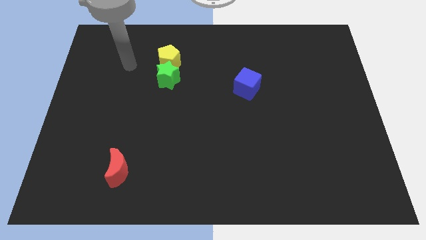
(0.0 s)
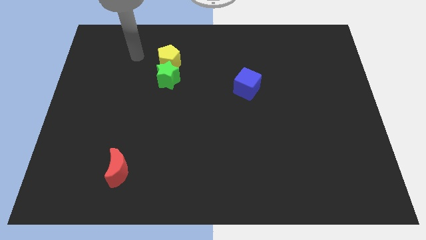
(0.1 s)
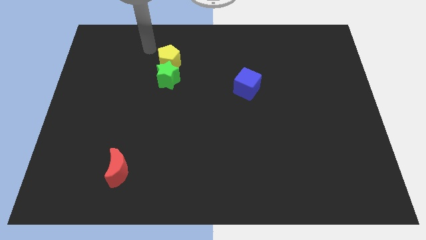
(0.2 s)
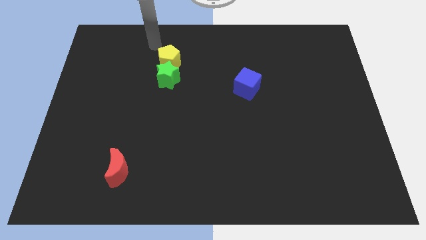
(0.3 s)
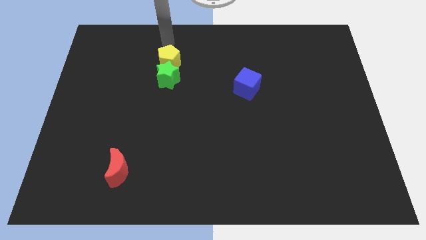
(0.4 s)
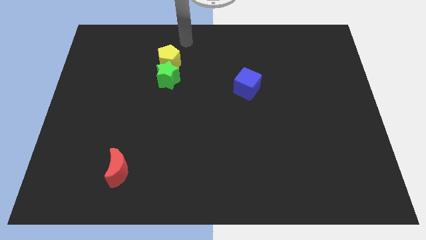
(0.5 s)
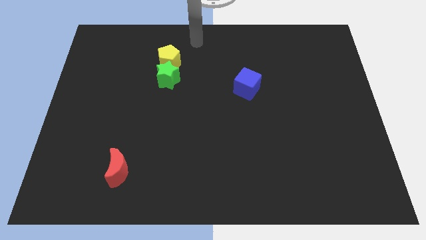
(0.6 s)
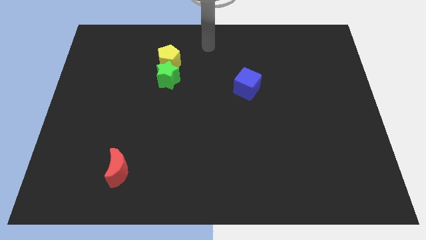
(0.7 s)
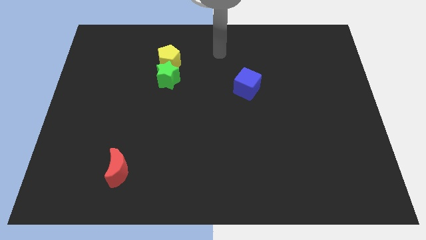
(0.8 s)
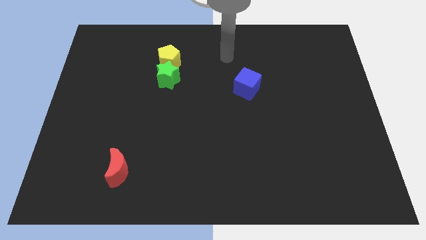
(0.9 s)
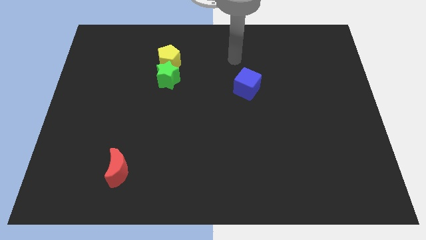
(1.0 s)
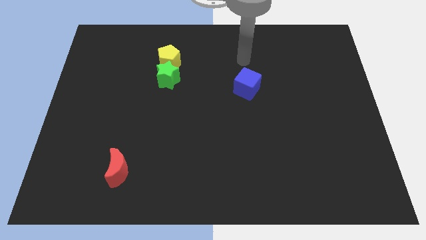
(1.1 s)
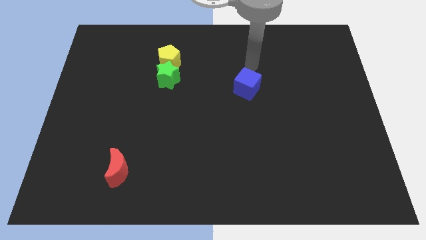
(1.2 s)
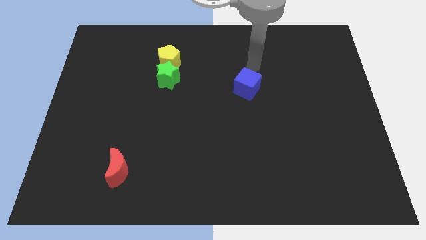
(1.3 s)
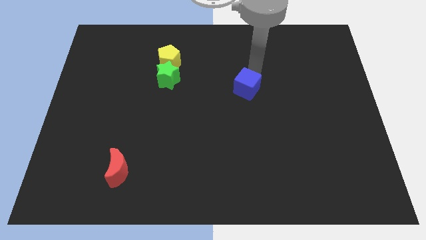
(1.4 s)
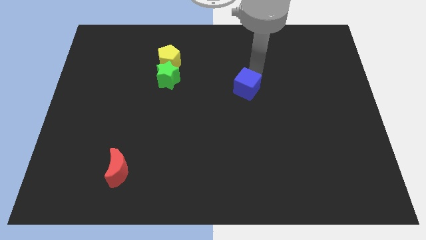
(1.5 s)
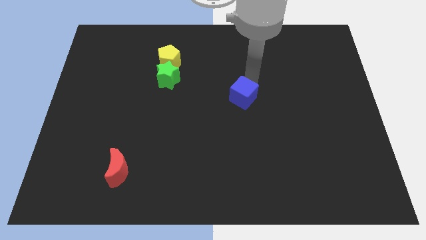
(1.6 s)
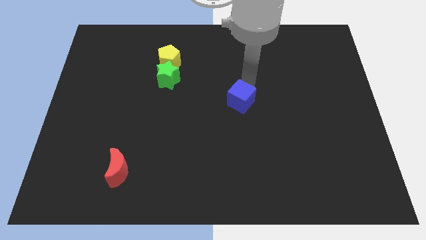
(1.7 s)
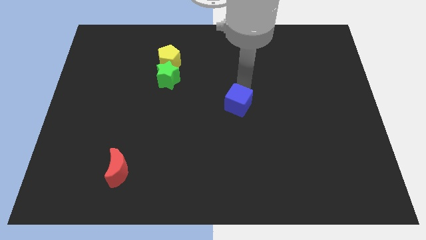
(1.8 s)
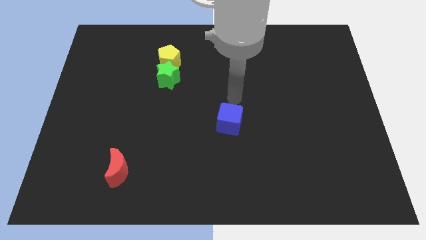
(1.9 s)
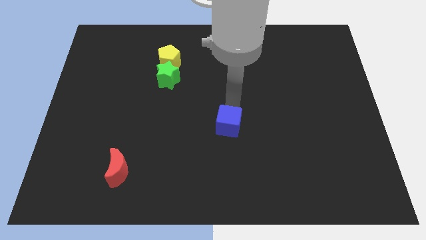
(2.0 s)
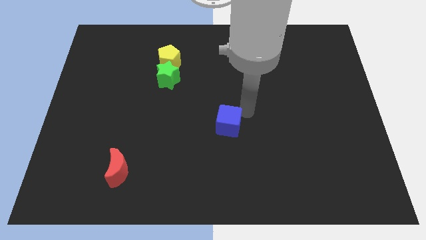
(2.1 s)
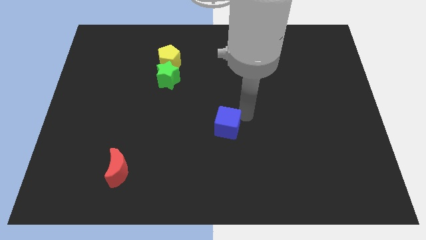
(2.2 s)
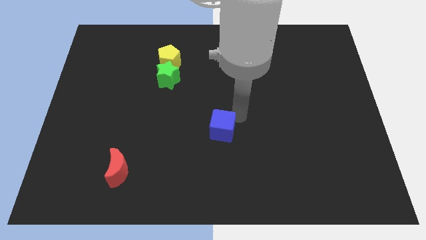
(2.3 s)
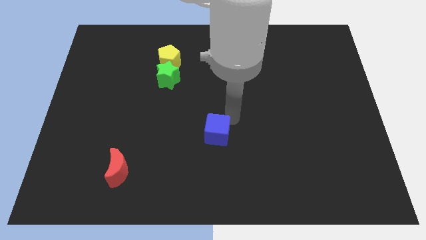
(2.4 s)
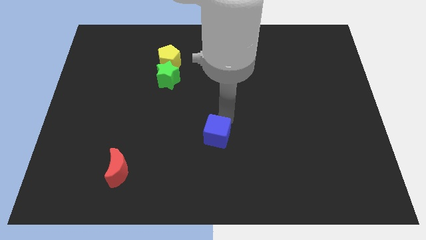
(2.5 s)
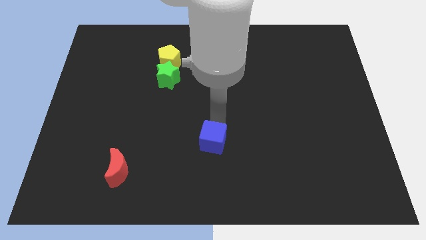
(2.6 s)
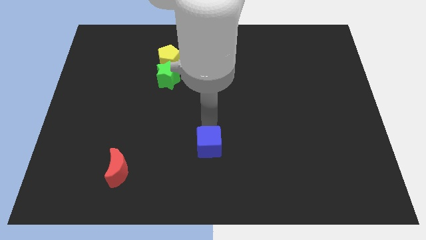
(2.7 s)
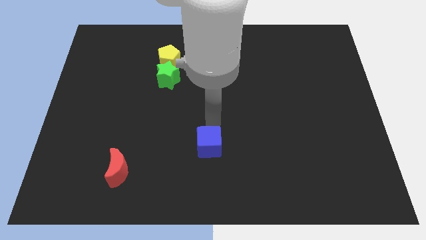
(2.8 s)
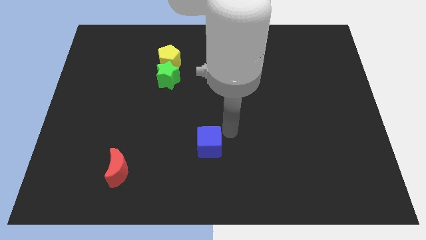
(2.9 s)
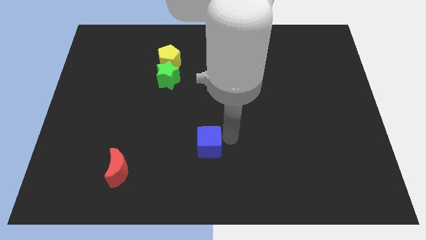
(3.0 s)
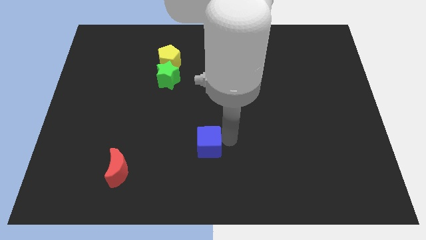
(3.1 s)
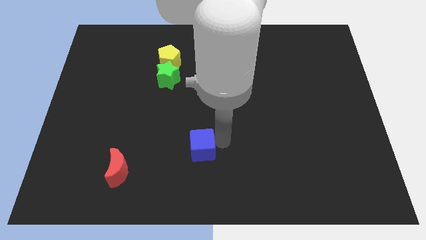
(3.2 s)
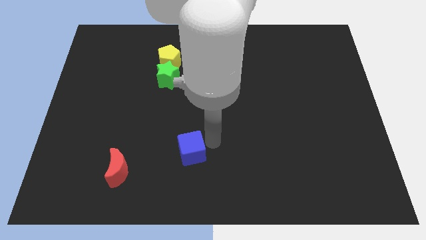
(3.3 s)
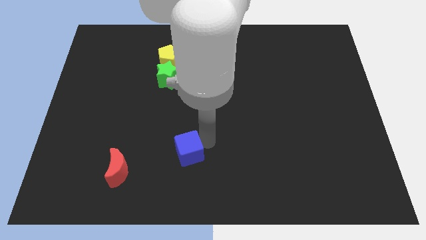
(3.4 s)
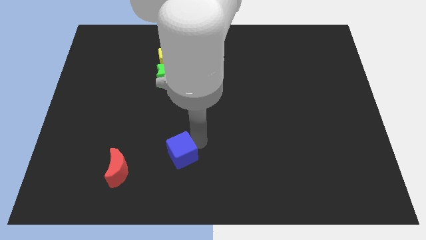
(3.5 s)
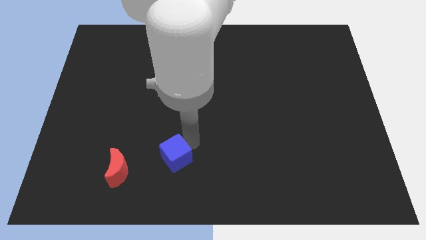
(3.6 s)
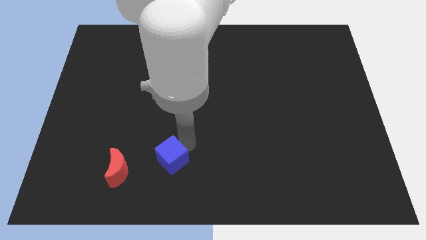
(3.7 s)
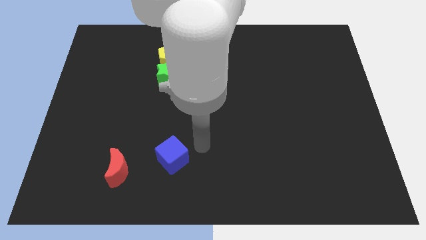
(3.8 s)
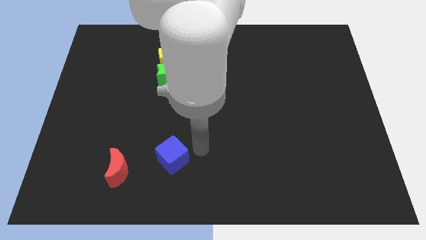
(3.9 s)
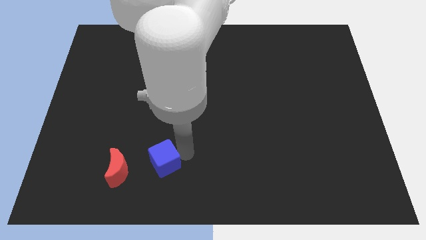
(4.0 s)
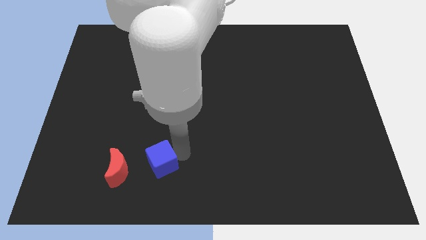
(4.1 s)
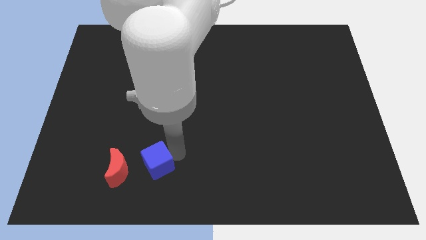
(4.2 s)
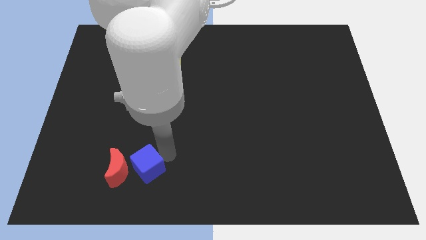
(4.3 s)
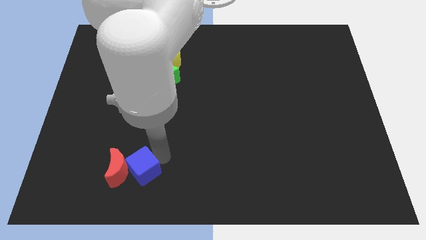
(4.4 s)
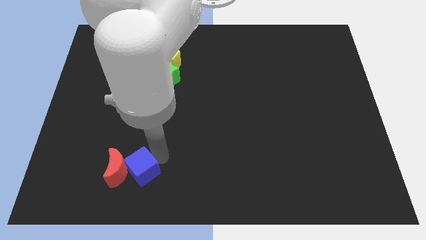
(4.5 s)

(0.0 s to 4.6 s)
push the blue cube towards the red moon

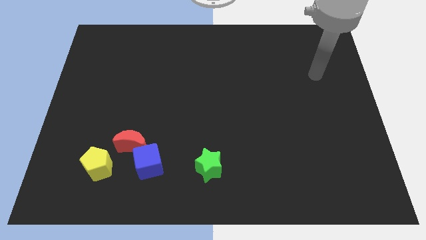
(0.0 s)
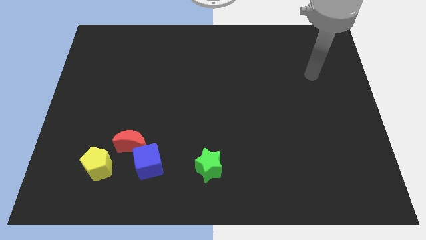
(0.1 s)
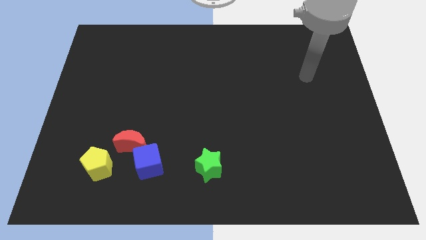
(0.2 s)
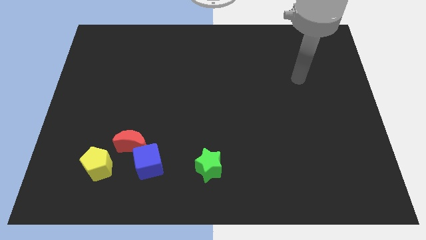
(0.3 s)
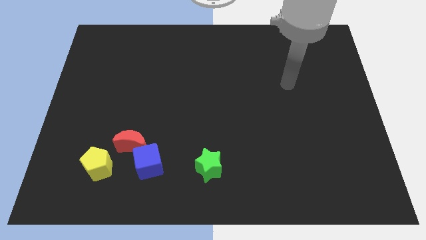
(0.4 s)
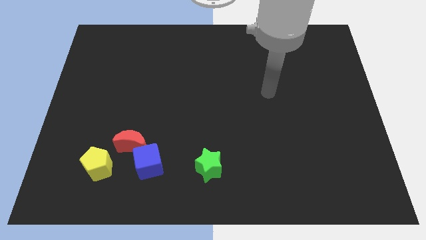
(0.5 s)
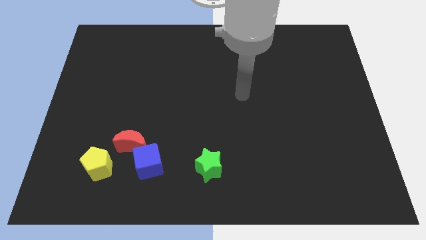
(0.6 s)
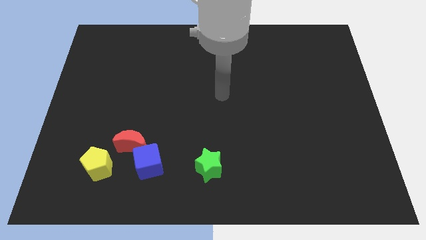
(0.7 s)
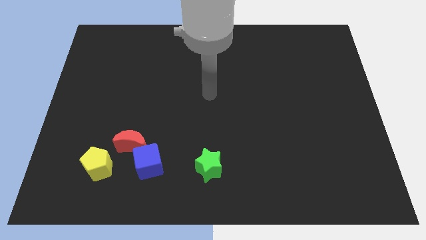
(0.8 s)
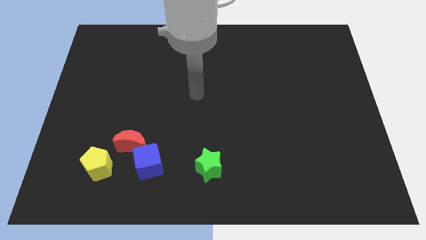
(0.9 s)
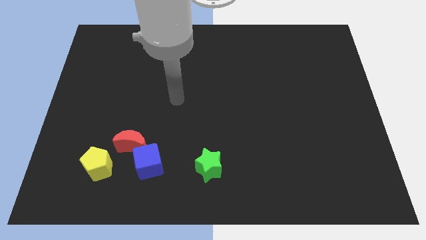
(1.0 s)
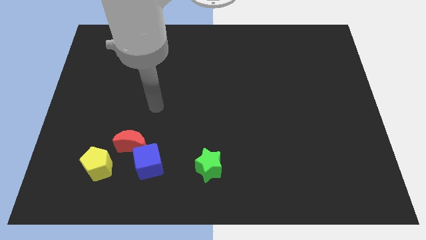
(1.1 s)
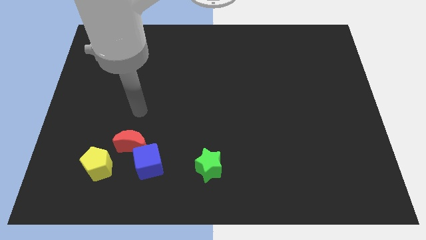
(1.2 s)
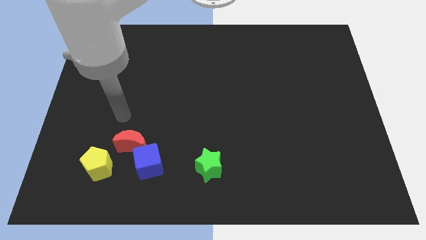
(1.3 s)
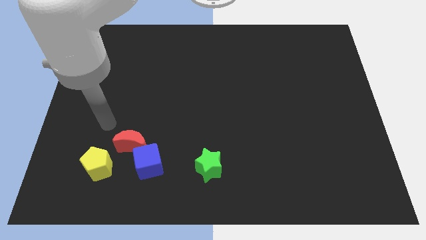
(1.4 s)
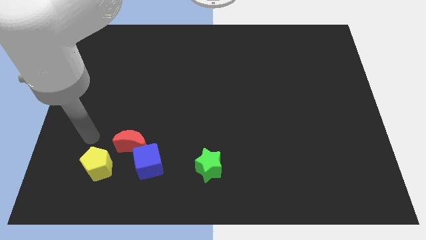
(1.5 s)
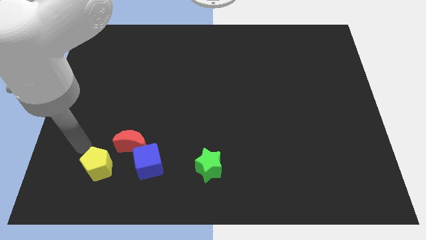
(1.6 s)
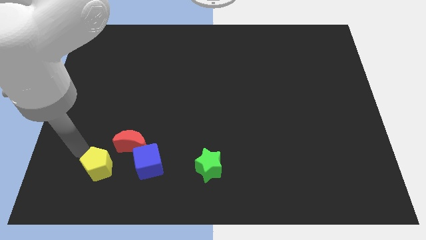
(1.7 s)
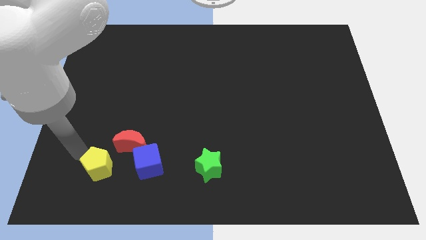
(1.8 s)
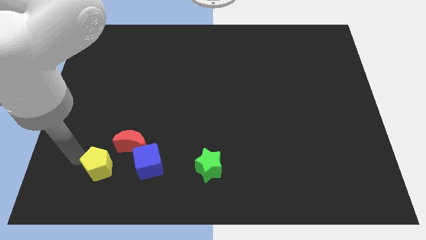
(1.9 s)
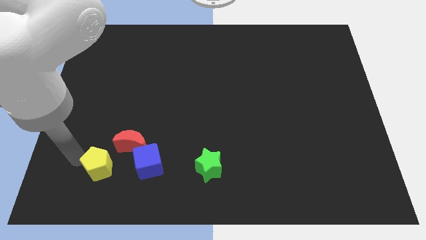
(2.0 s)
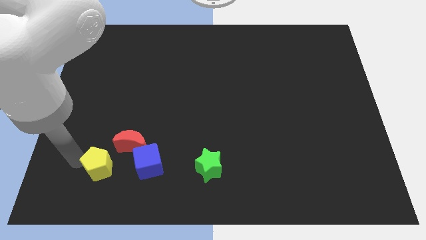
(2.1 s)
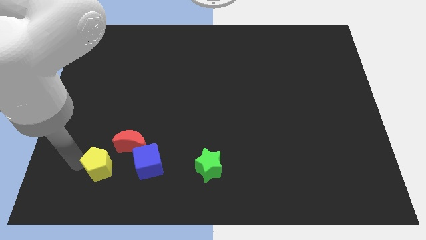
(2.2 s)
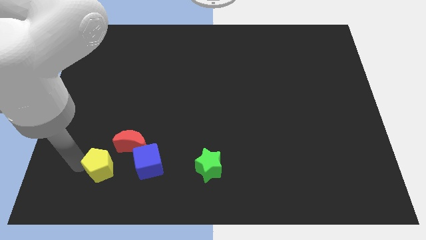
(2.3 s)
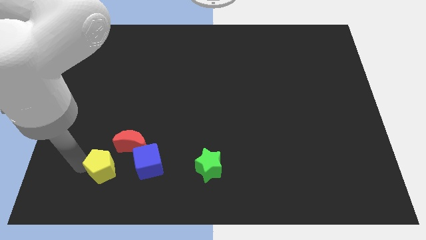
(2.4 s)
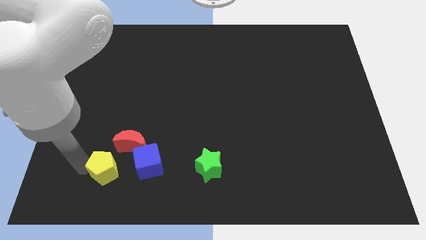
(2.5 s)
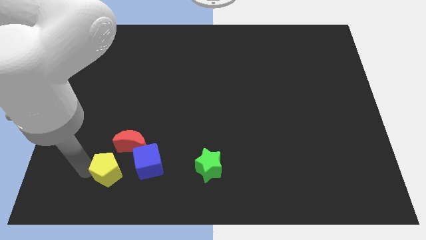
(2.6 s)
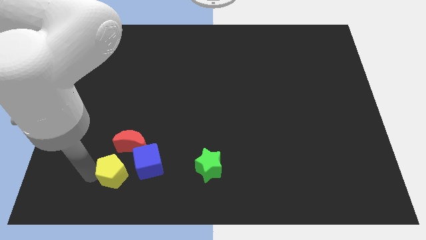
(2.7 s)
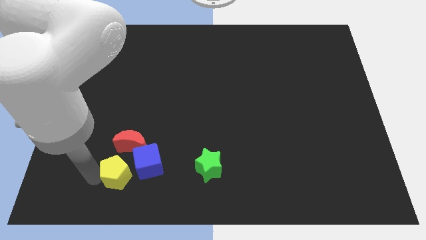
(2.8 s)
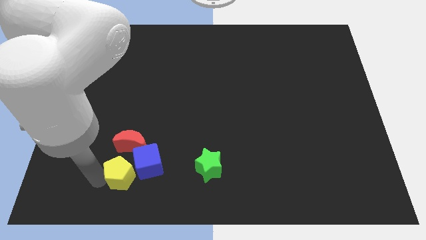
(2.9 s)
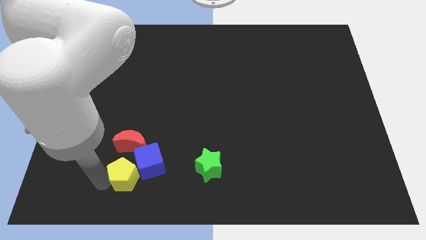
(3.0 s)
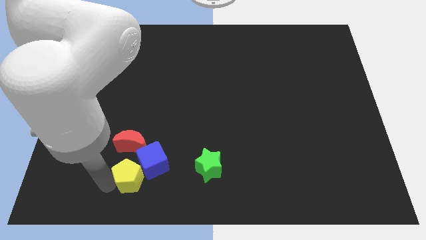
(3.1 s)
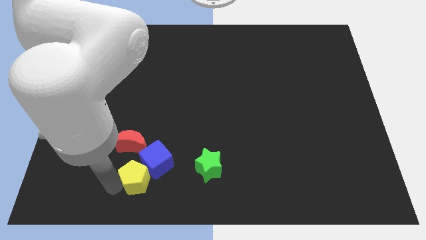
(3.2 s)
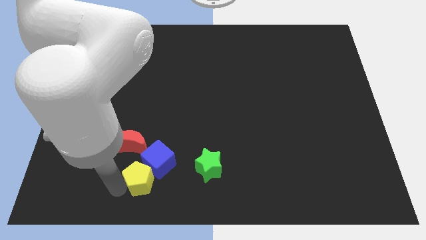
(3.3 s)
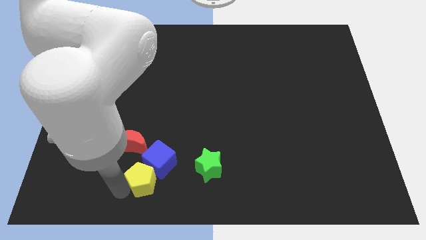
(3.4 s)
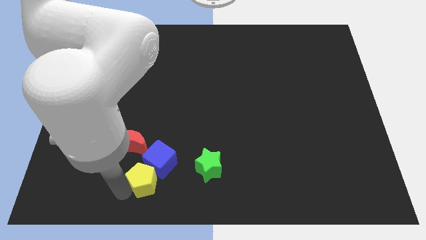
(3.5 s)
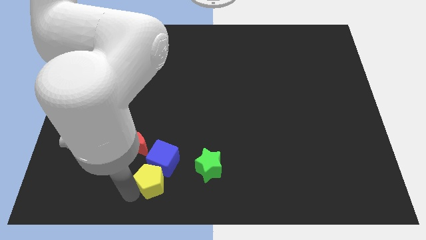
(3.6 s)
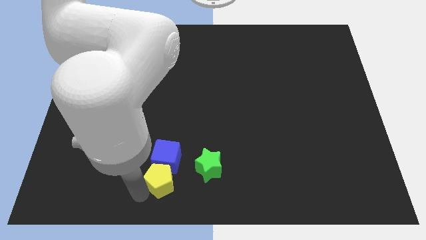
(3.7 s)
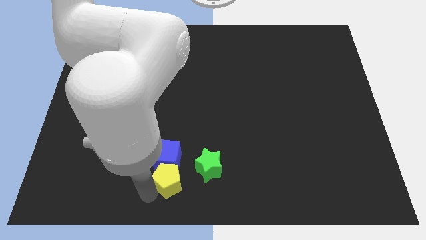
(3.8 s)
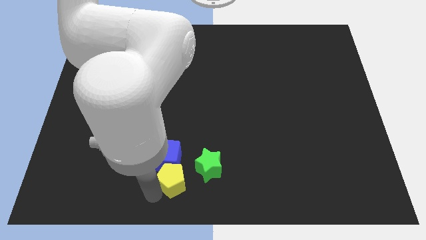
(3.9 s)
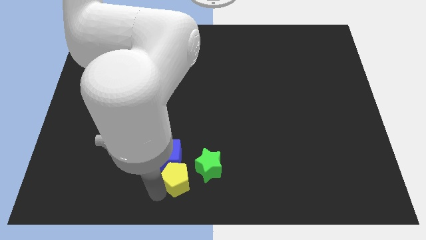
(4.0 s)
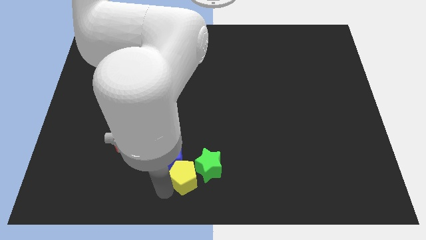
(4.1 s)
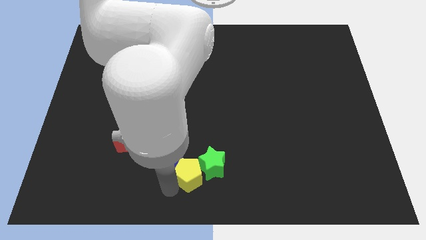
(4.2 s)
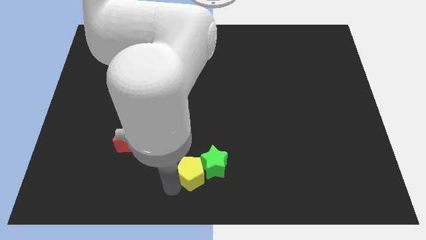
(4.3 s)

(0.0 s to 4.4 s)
put the pentagon towards the star
